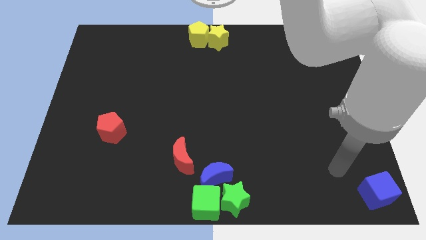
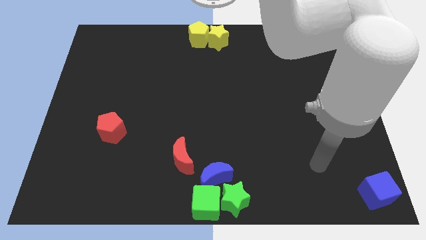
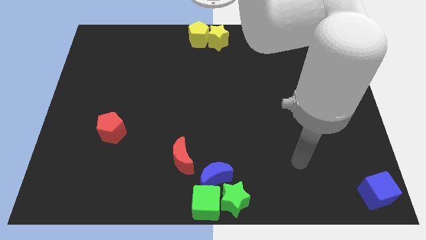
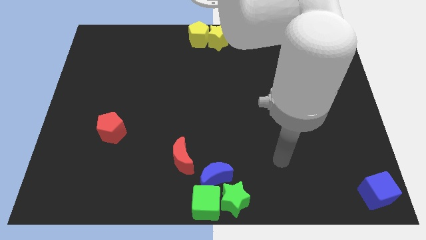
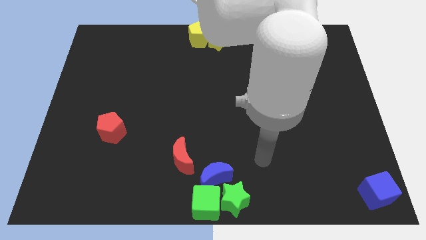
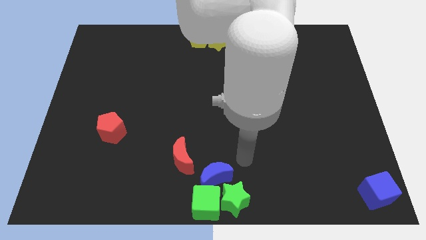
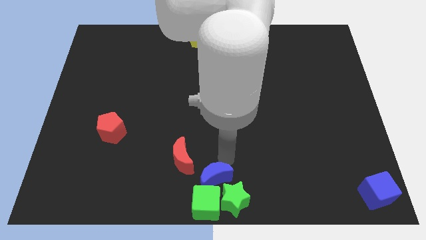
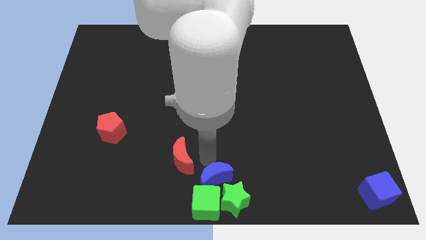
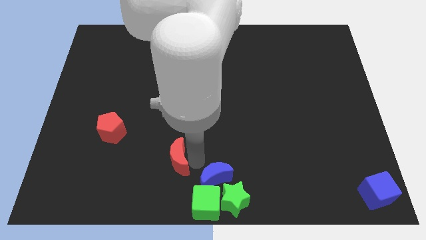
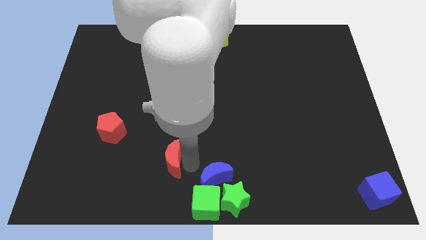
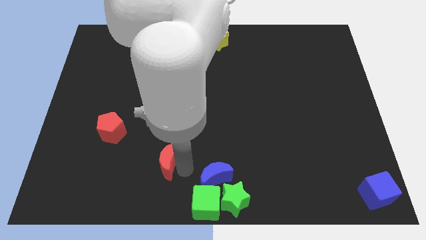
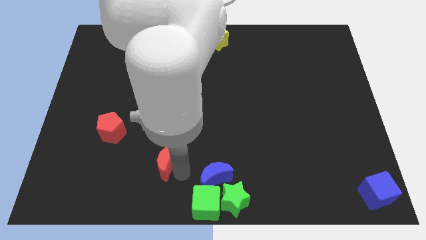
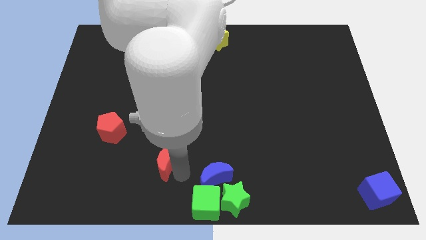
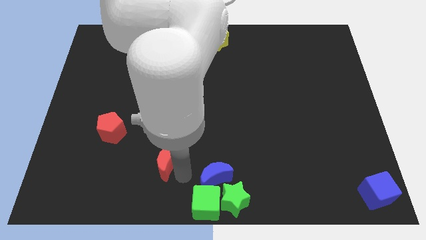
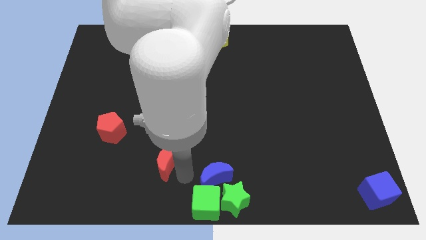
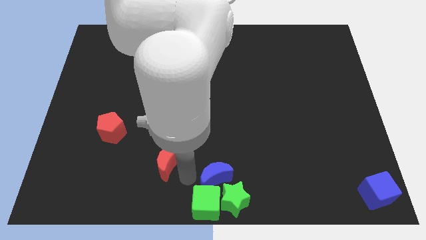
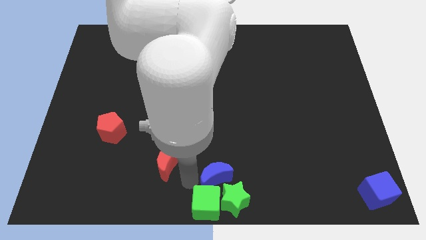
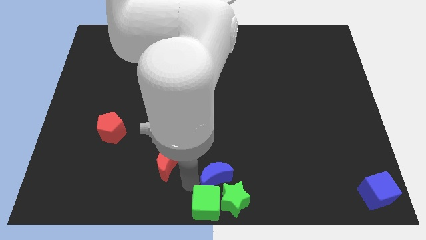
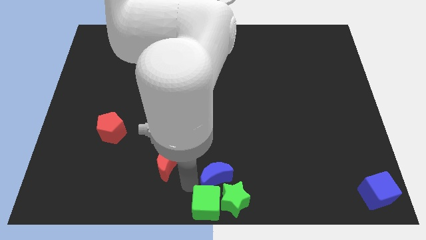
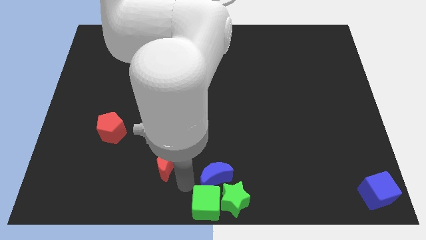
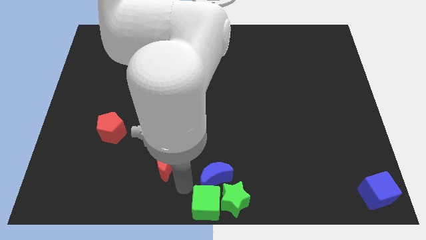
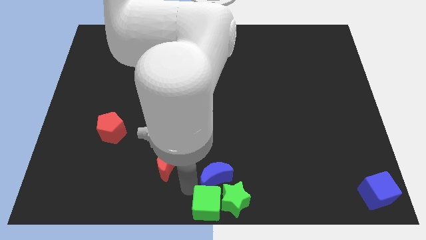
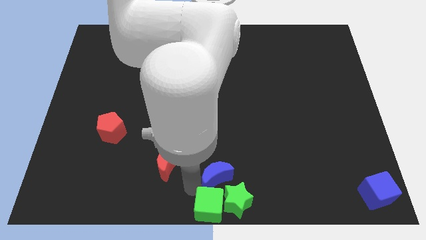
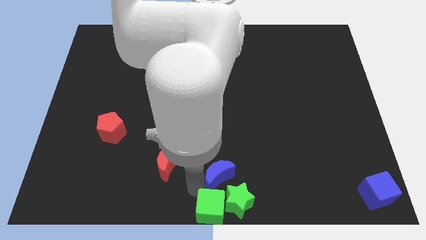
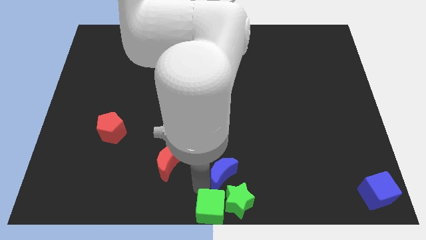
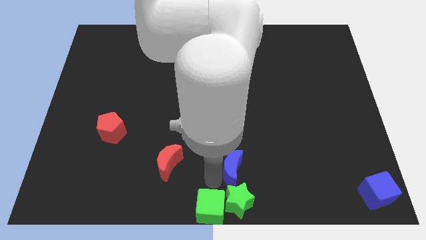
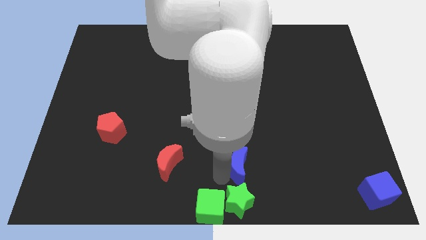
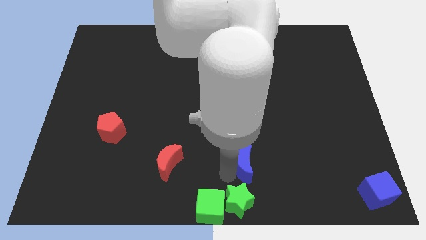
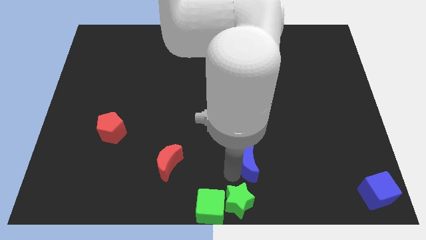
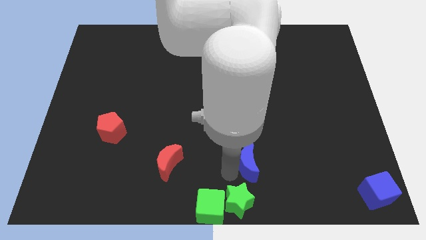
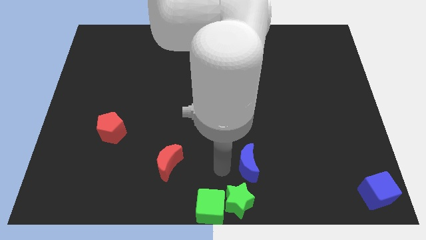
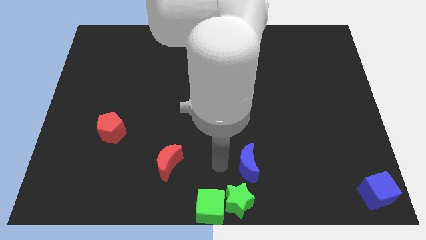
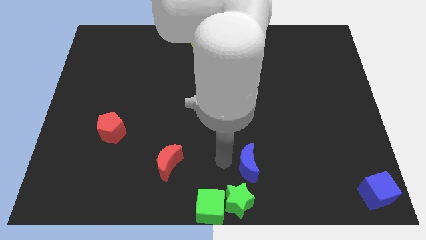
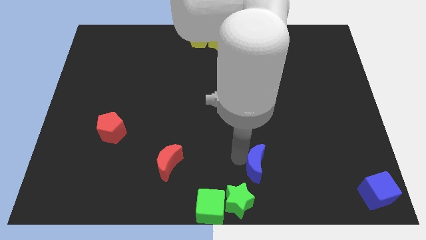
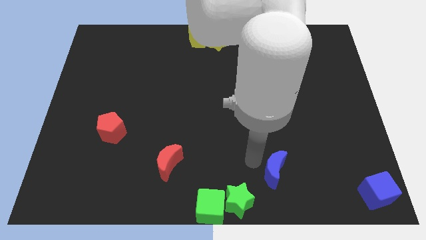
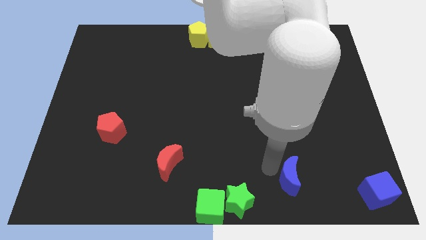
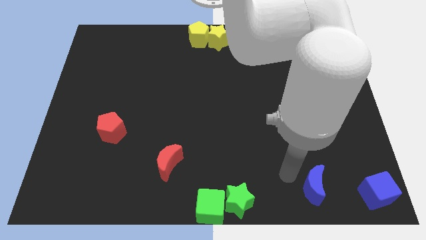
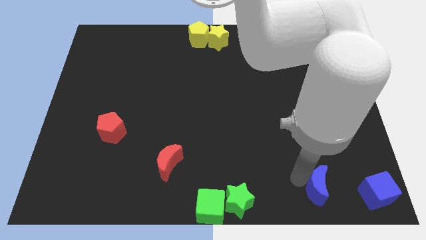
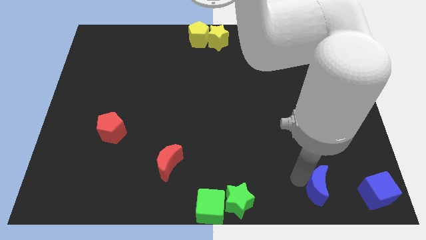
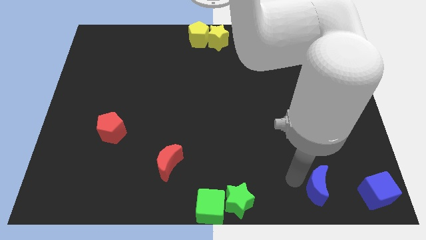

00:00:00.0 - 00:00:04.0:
separate blue moon from the red moon

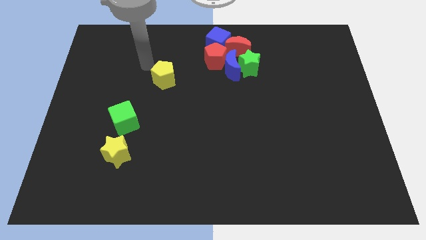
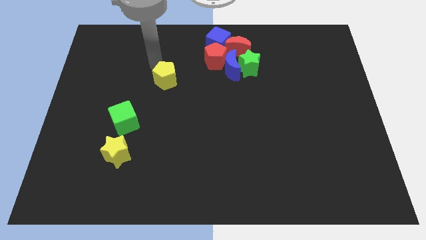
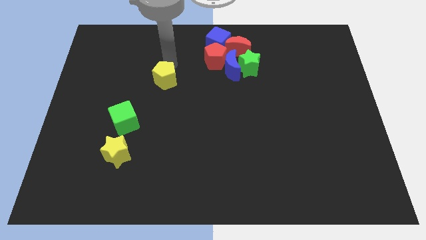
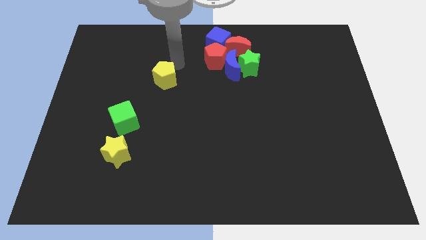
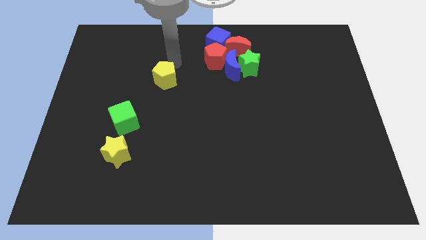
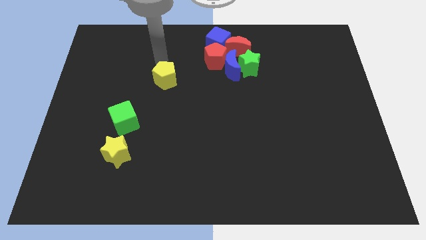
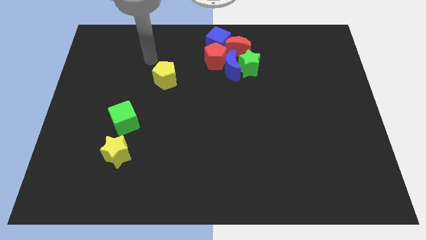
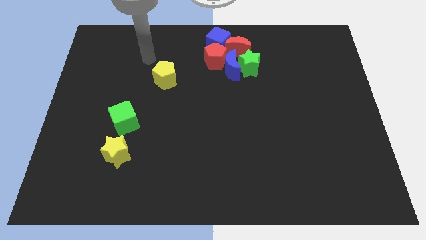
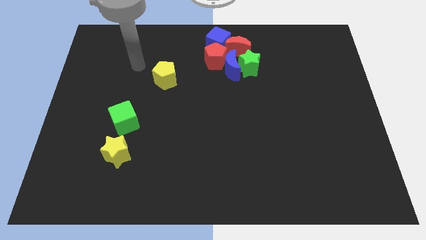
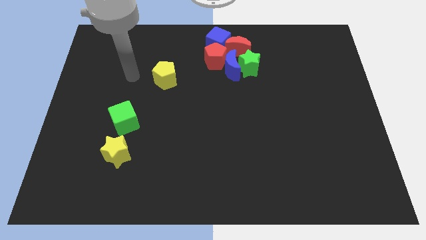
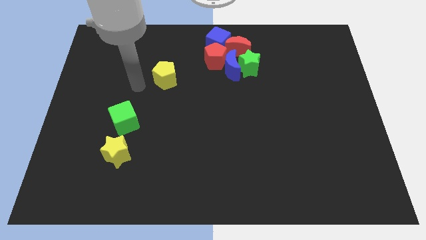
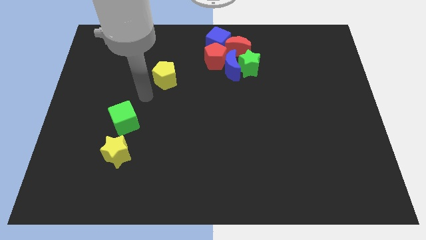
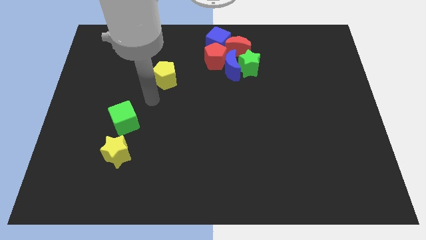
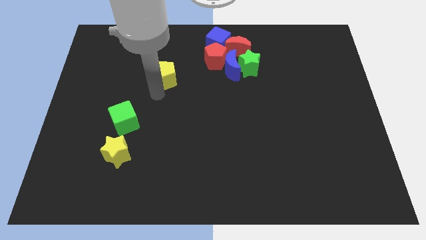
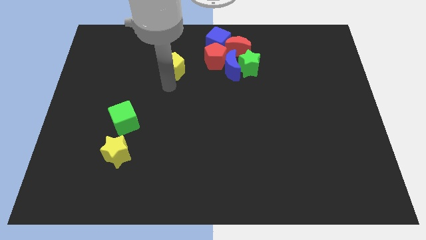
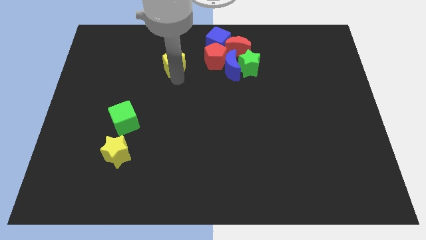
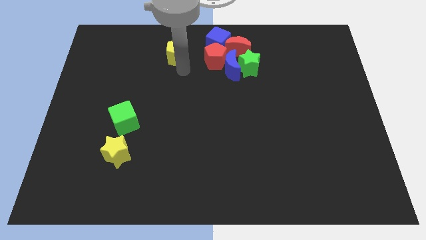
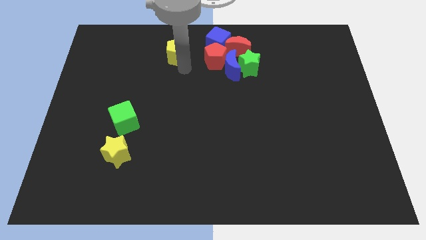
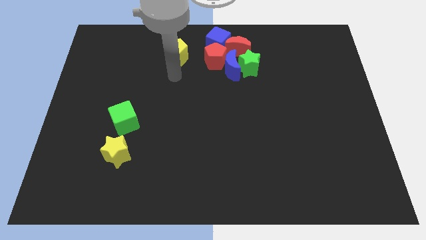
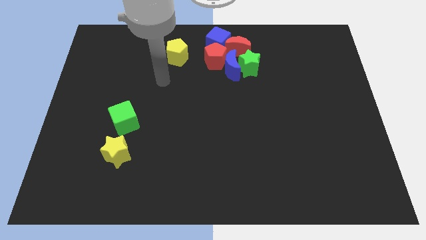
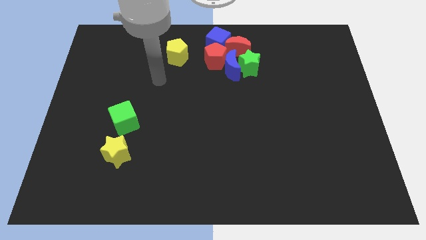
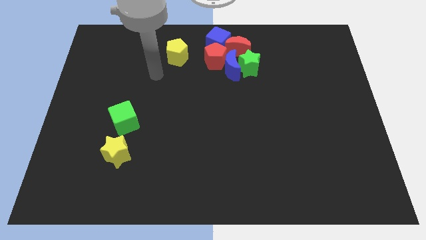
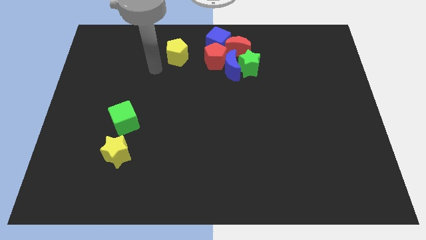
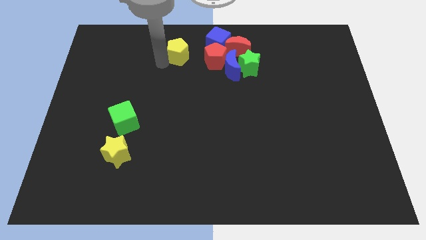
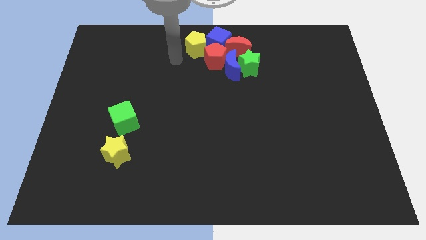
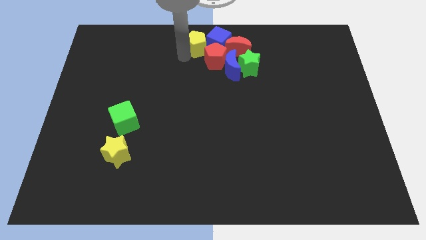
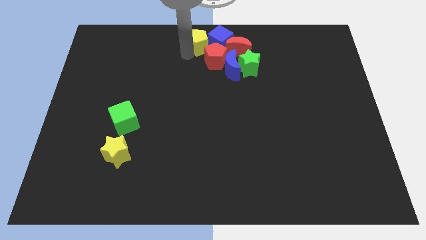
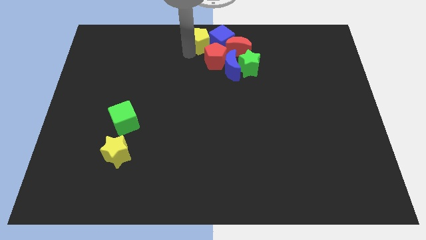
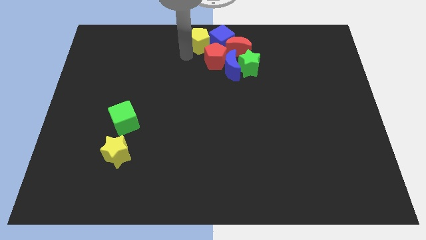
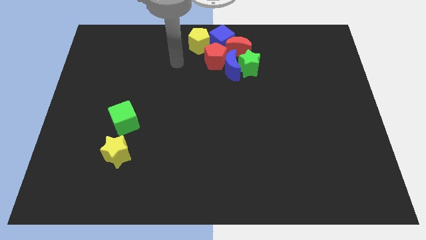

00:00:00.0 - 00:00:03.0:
push the yellow pentagon into a group of blocks

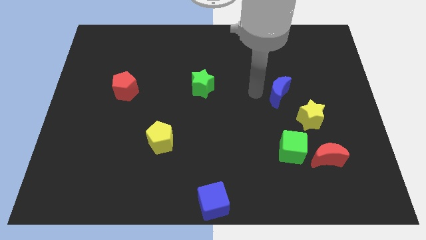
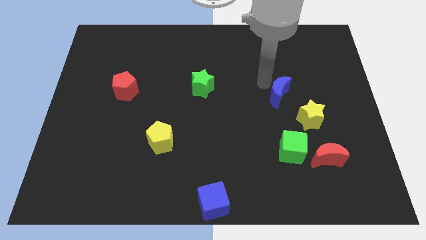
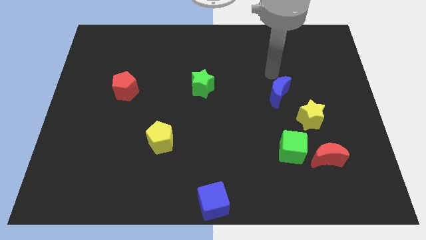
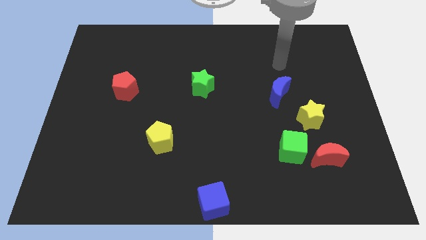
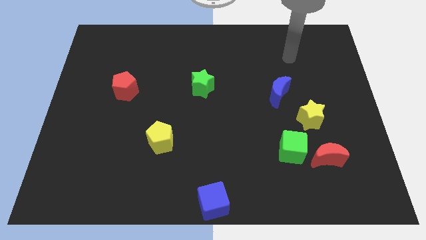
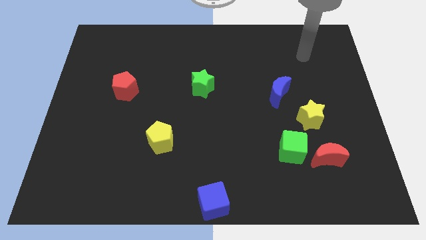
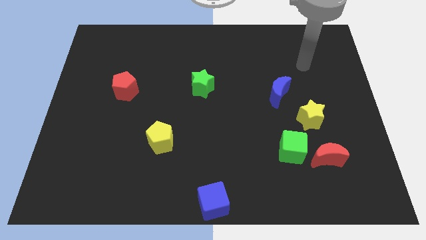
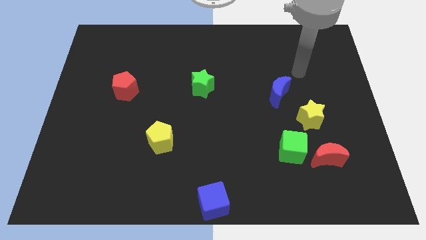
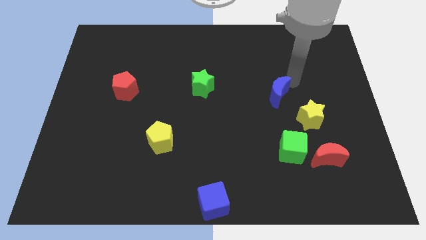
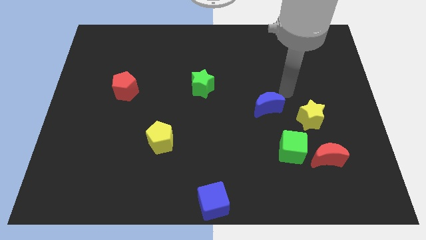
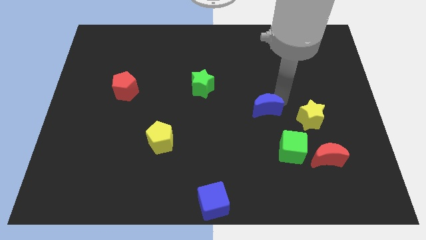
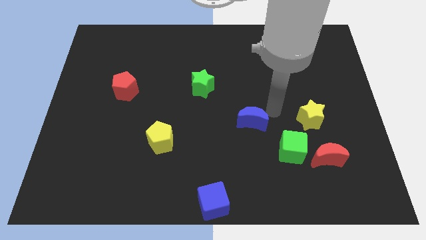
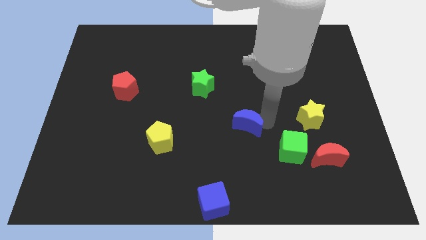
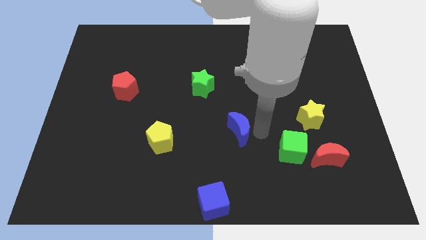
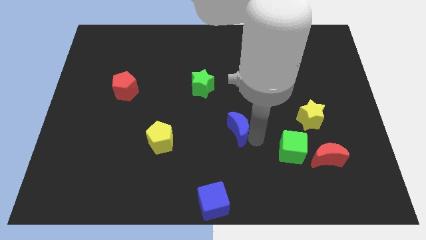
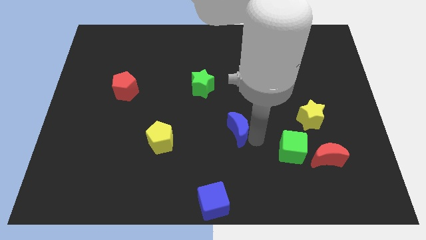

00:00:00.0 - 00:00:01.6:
move blue crescent towards blue cube

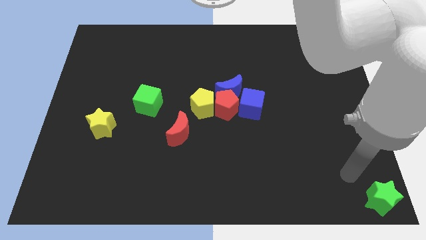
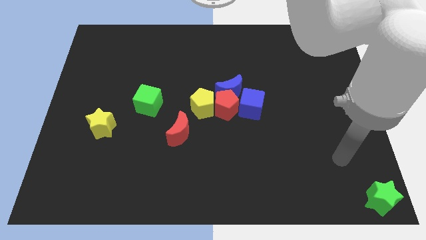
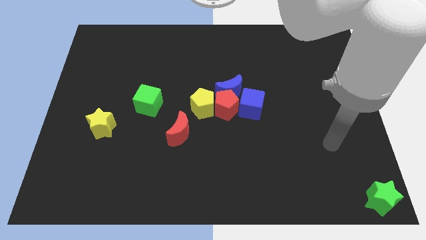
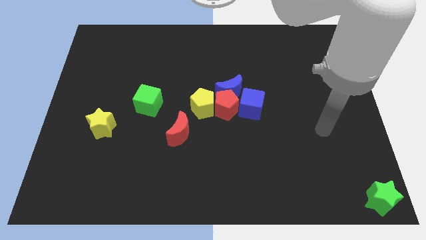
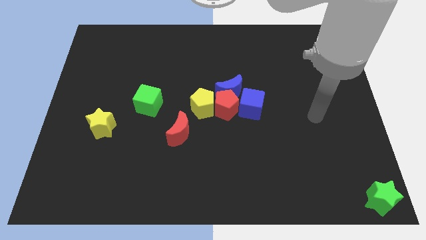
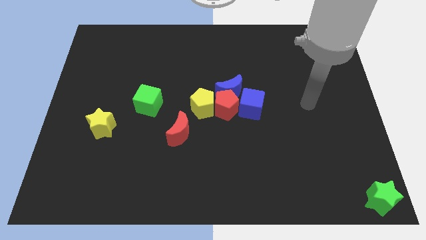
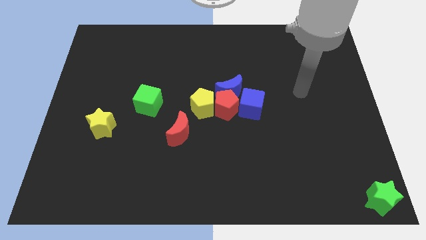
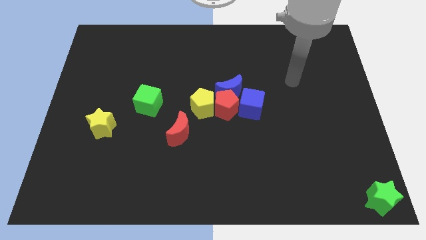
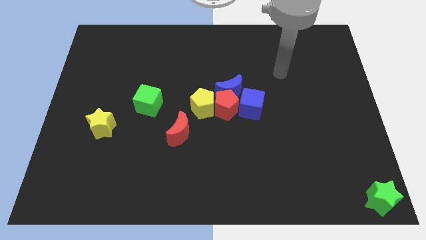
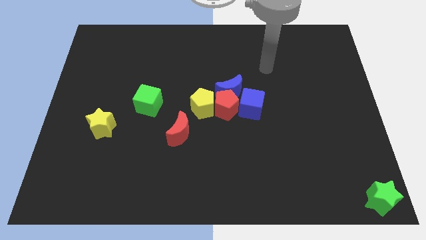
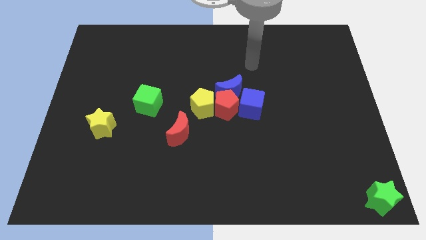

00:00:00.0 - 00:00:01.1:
move your arm away from green star
